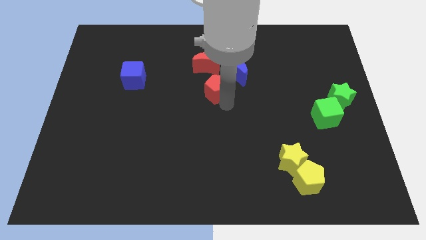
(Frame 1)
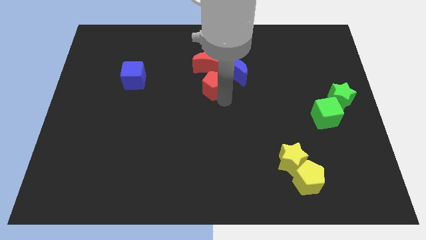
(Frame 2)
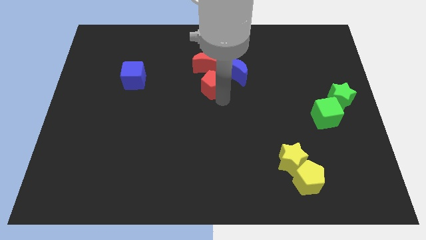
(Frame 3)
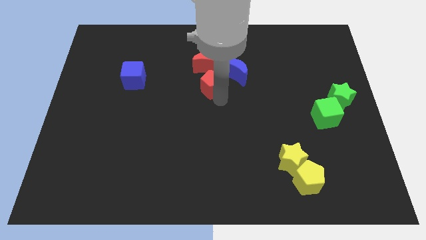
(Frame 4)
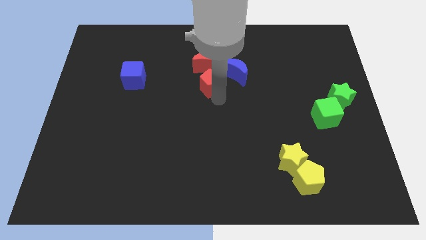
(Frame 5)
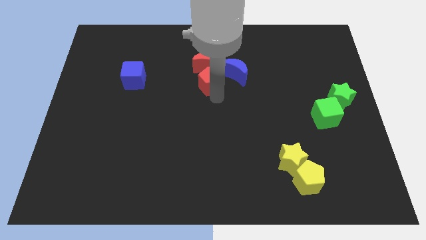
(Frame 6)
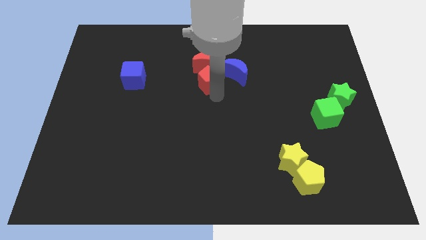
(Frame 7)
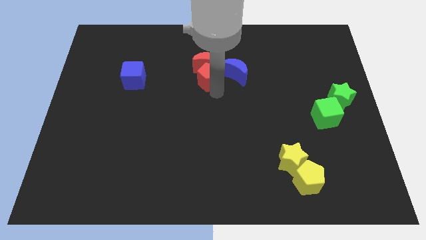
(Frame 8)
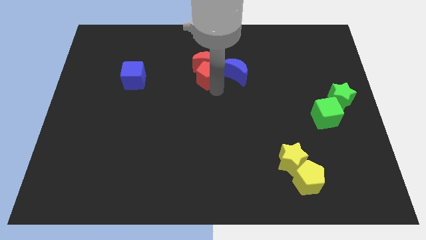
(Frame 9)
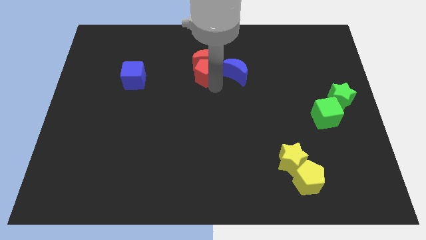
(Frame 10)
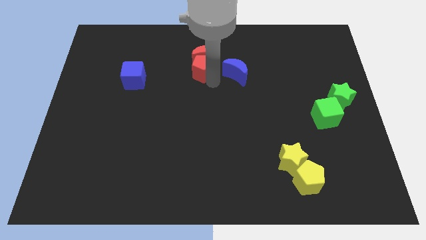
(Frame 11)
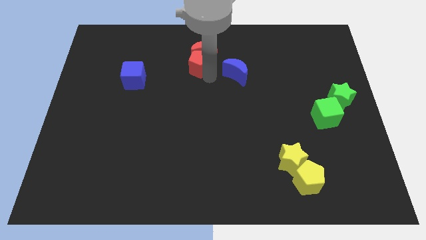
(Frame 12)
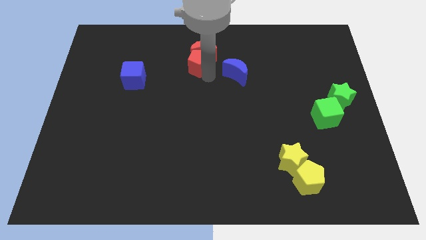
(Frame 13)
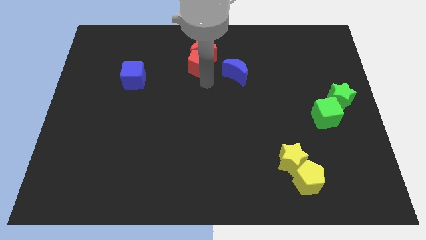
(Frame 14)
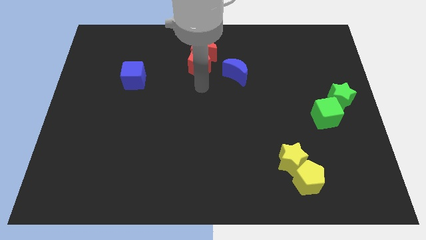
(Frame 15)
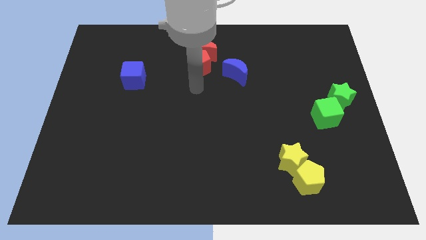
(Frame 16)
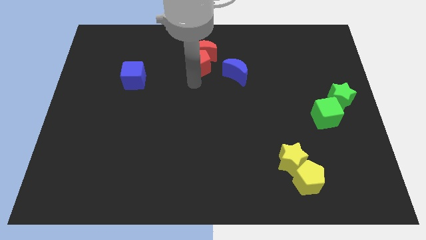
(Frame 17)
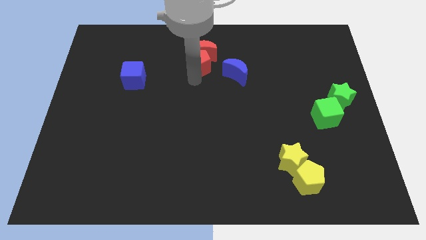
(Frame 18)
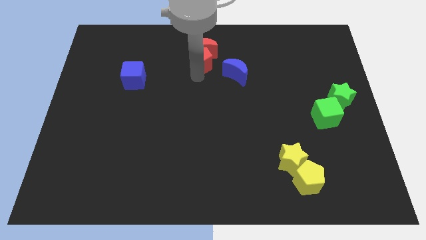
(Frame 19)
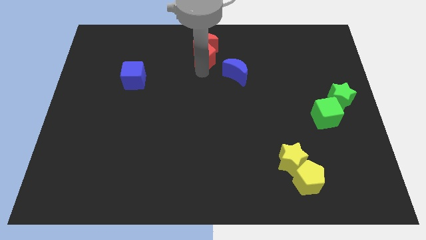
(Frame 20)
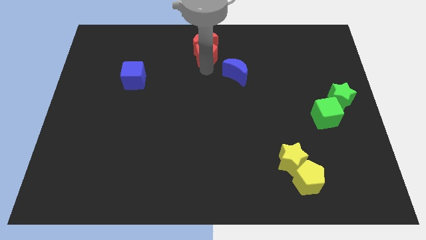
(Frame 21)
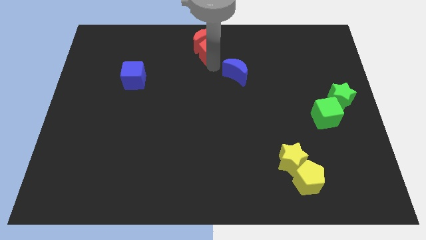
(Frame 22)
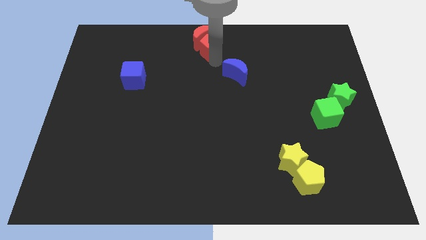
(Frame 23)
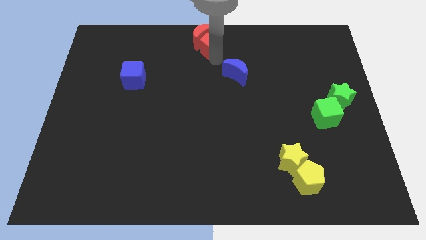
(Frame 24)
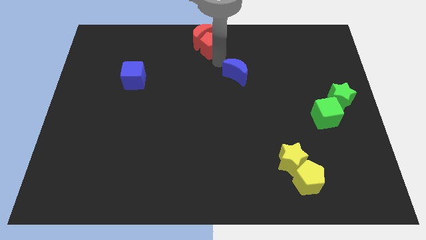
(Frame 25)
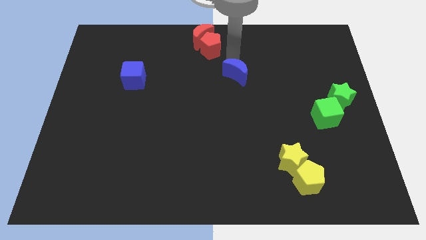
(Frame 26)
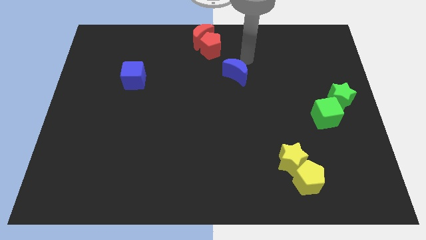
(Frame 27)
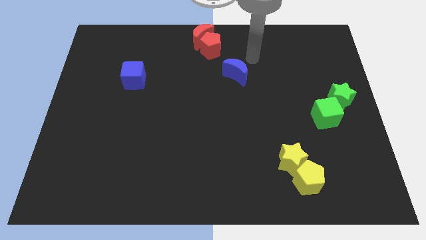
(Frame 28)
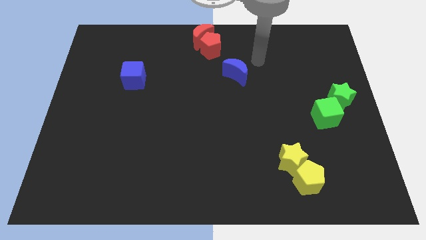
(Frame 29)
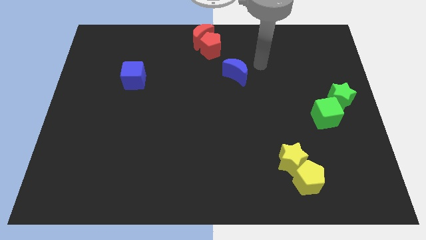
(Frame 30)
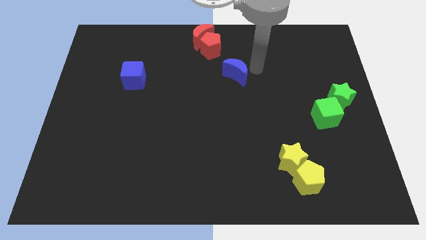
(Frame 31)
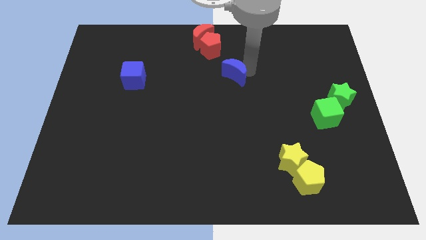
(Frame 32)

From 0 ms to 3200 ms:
place both the red blocks at the top center of the board

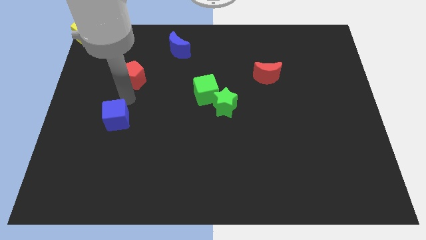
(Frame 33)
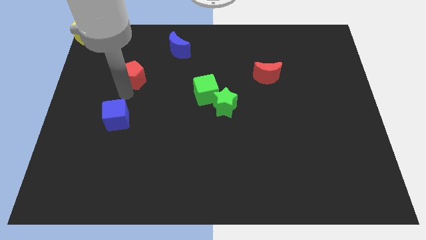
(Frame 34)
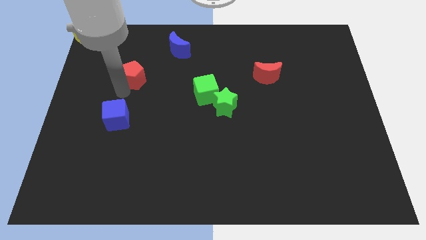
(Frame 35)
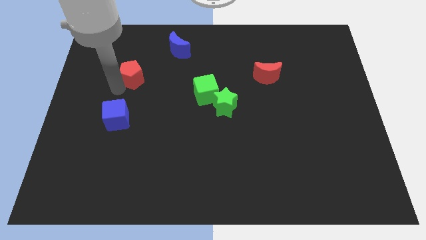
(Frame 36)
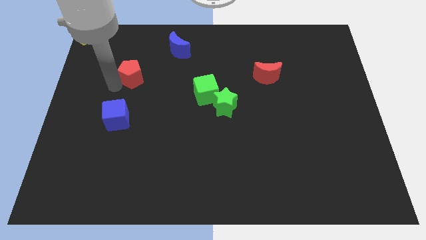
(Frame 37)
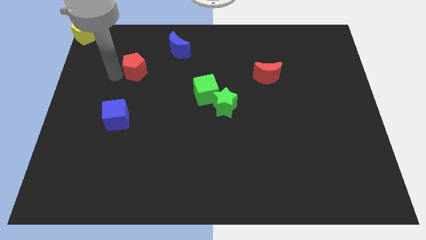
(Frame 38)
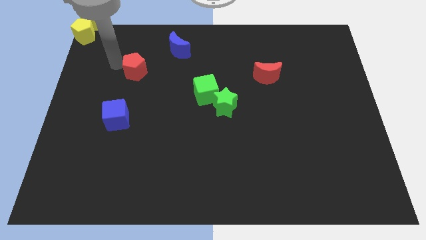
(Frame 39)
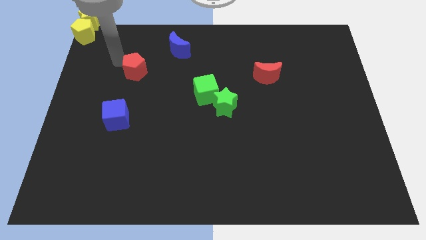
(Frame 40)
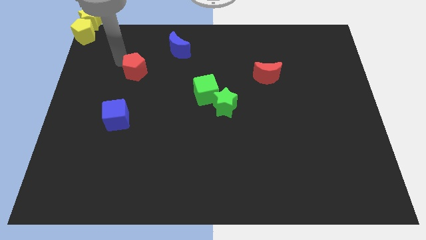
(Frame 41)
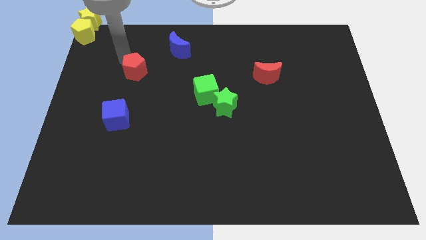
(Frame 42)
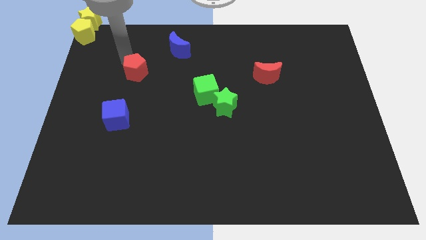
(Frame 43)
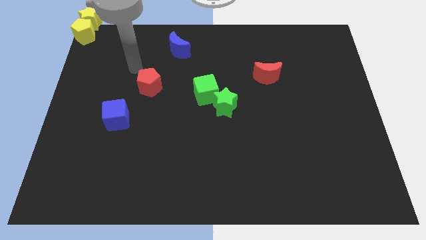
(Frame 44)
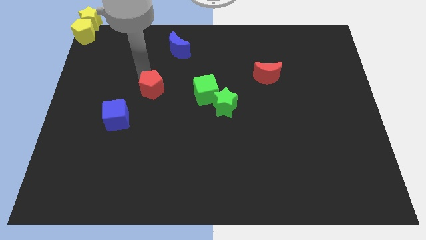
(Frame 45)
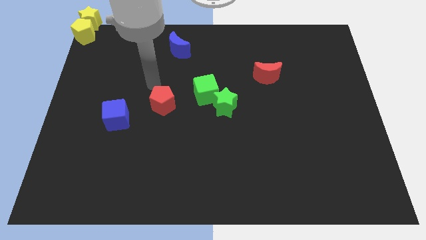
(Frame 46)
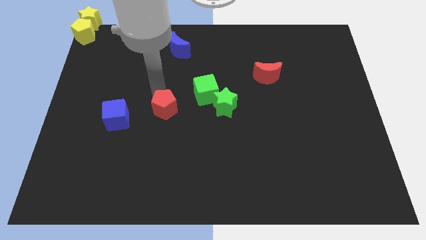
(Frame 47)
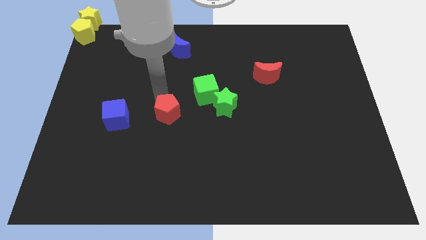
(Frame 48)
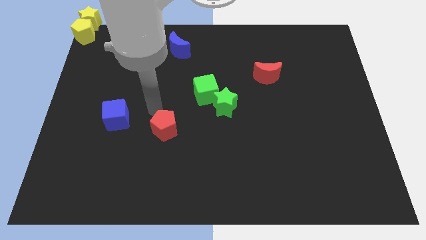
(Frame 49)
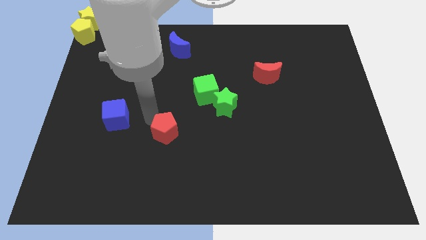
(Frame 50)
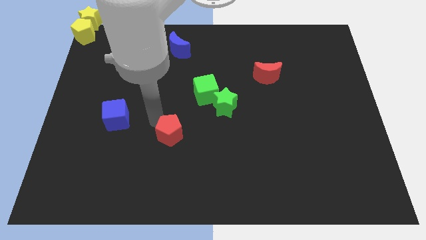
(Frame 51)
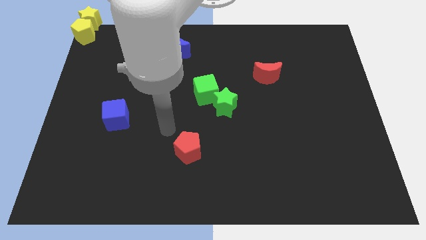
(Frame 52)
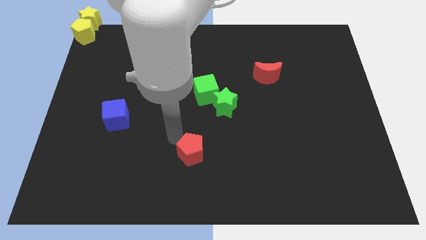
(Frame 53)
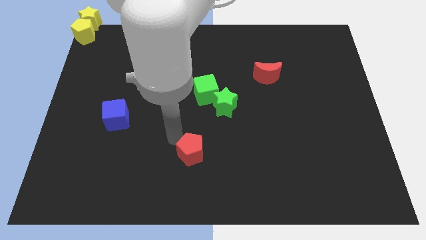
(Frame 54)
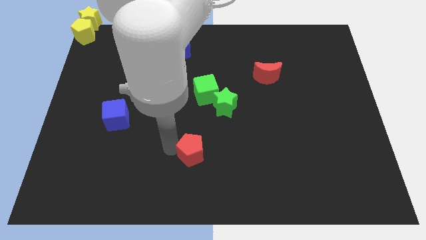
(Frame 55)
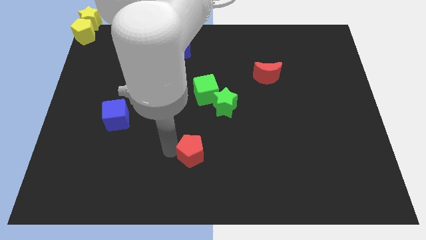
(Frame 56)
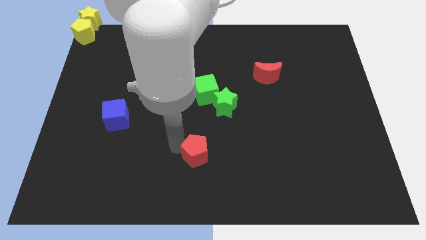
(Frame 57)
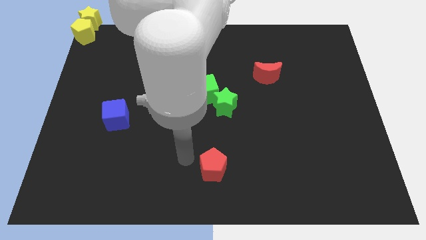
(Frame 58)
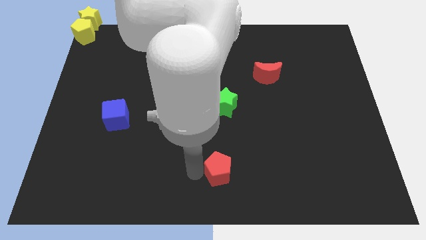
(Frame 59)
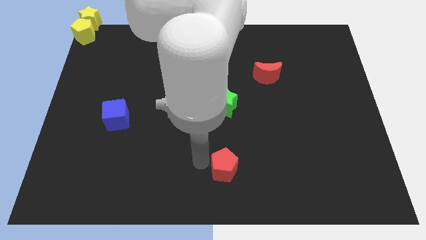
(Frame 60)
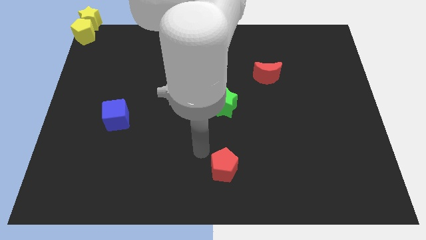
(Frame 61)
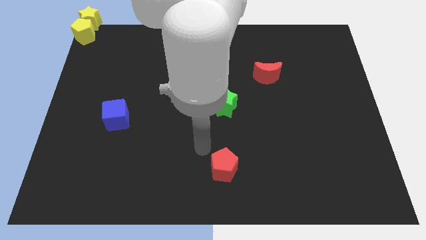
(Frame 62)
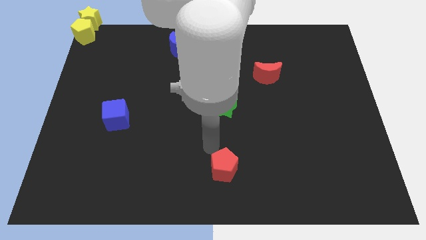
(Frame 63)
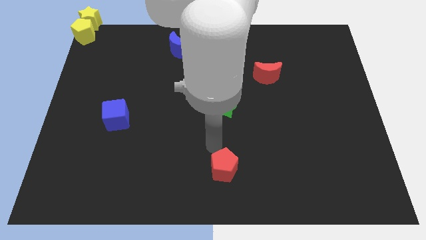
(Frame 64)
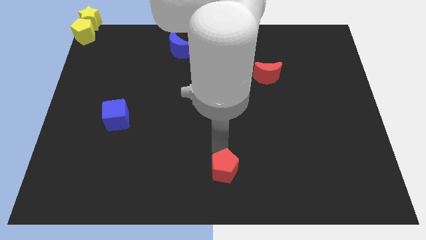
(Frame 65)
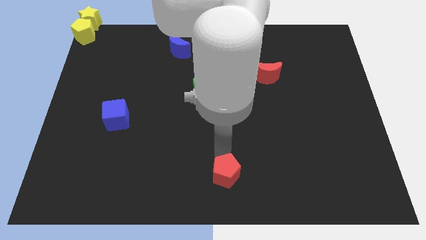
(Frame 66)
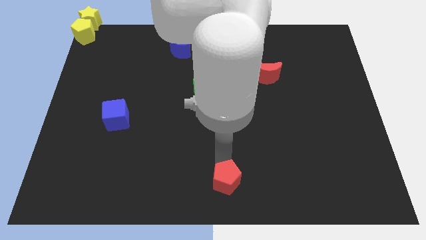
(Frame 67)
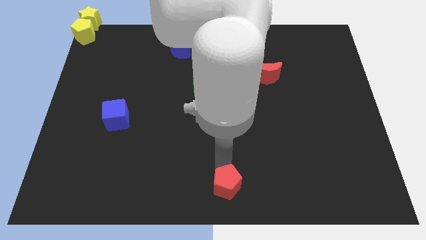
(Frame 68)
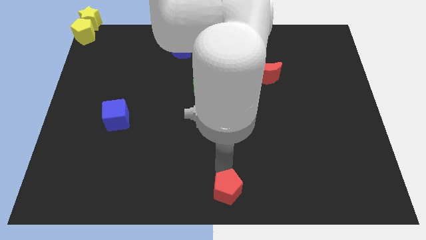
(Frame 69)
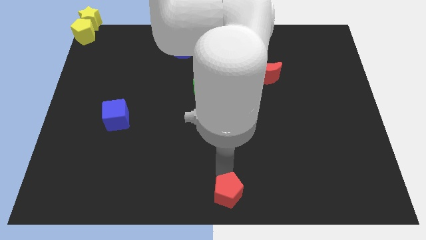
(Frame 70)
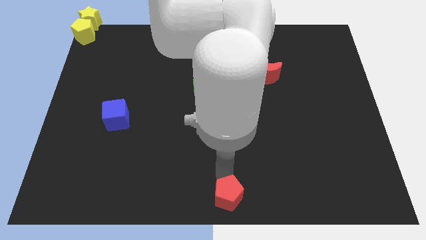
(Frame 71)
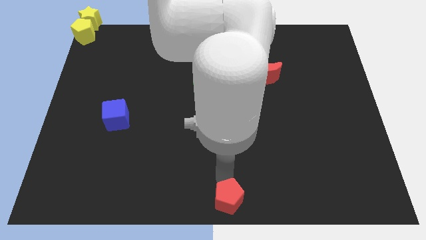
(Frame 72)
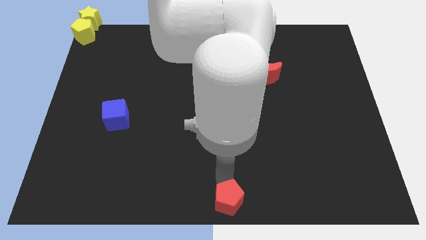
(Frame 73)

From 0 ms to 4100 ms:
move the red pentagon to the bottom center of the board

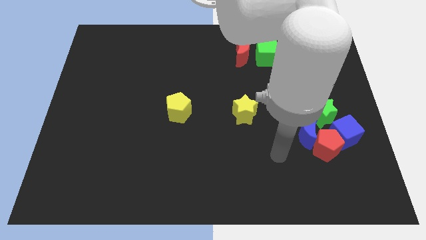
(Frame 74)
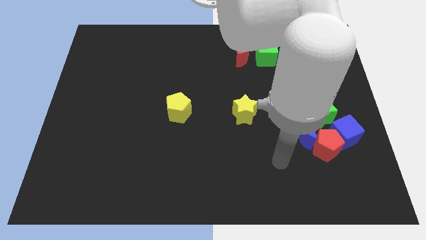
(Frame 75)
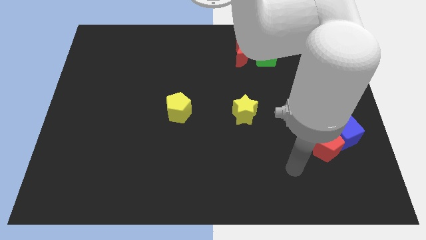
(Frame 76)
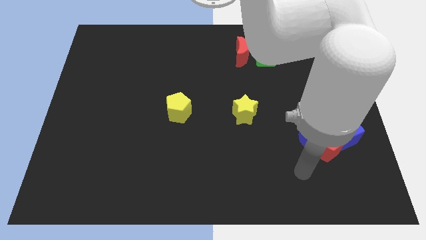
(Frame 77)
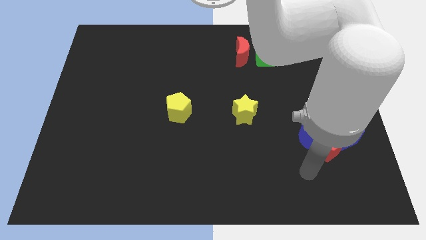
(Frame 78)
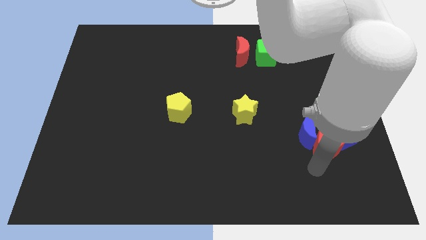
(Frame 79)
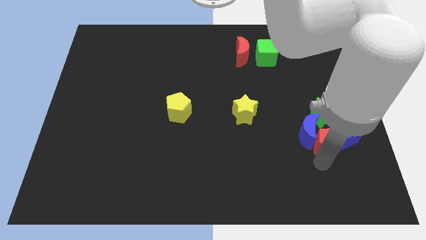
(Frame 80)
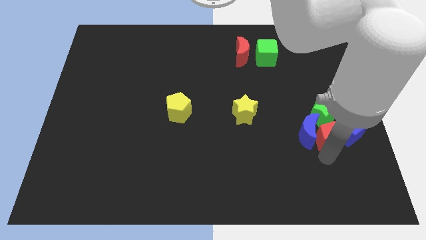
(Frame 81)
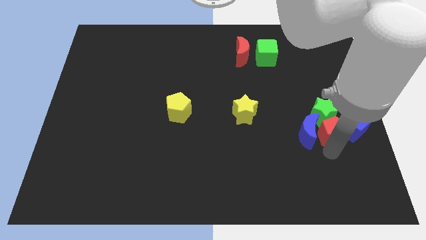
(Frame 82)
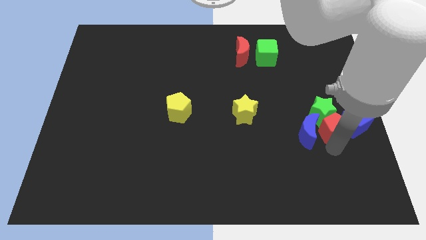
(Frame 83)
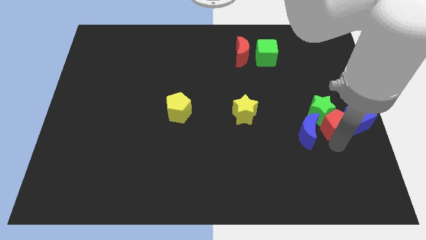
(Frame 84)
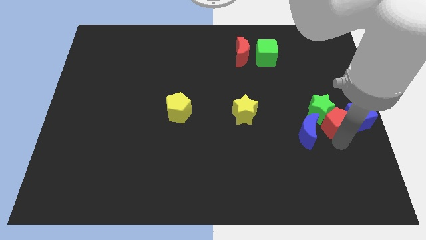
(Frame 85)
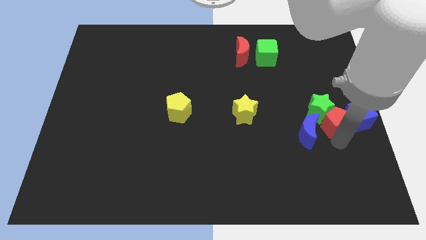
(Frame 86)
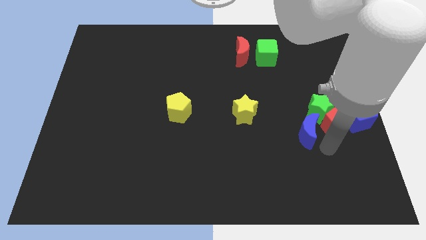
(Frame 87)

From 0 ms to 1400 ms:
push red pentagon a little upwards

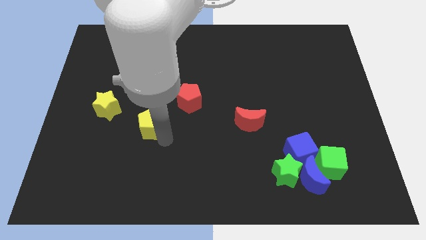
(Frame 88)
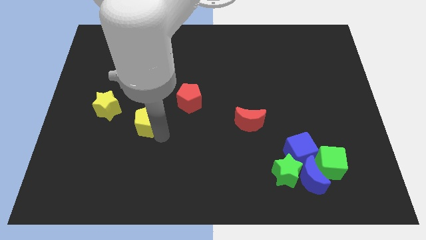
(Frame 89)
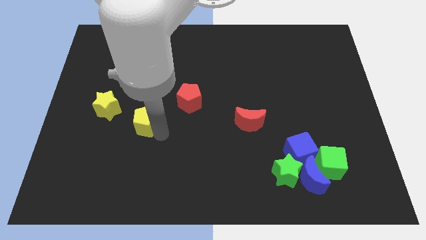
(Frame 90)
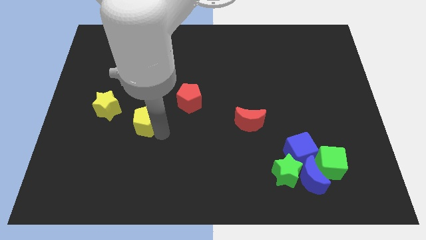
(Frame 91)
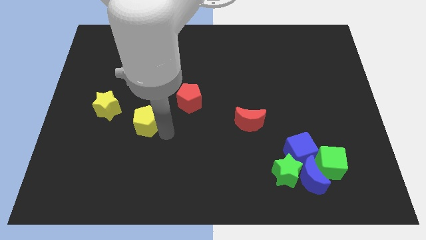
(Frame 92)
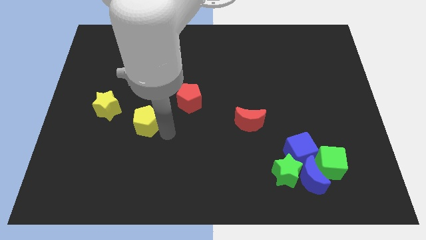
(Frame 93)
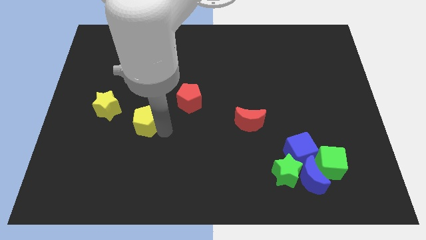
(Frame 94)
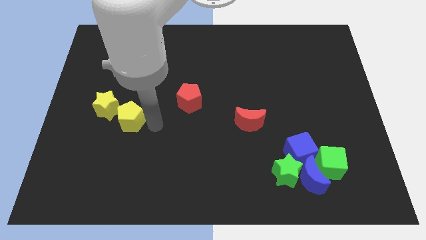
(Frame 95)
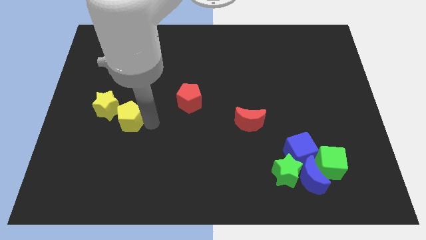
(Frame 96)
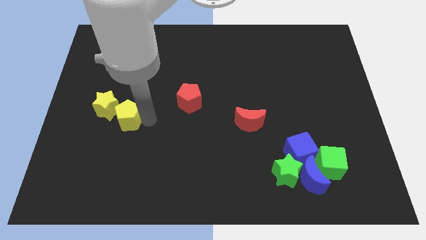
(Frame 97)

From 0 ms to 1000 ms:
place yellow pentagon to the bottom right of yellow star
